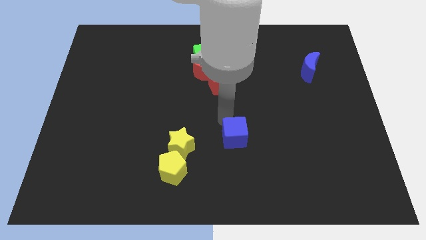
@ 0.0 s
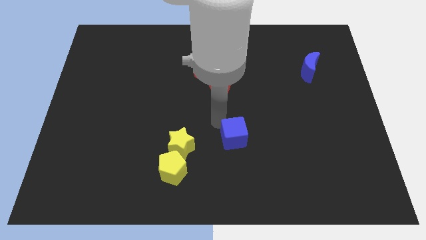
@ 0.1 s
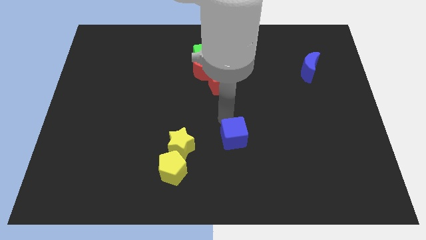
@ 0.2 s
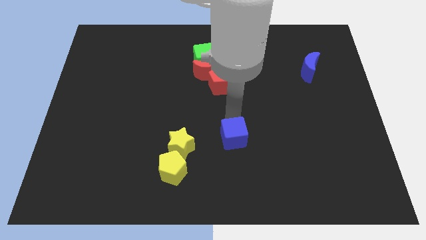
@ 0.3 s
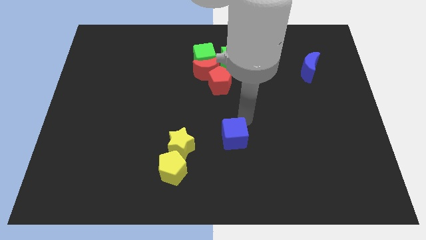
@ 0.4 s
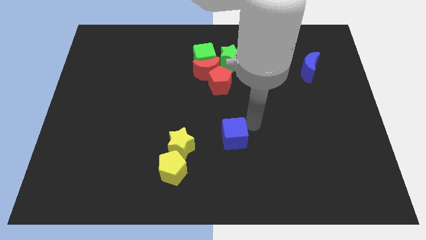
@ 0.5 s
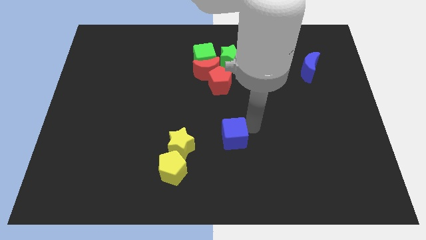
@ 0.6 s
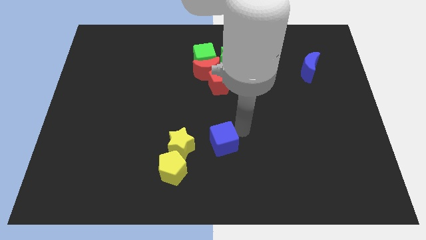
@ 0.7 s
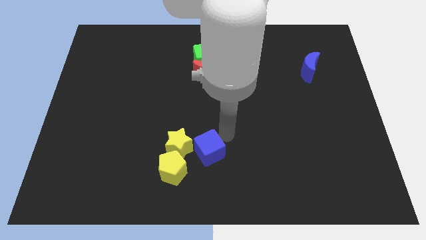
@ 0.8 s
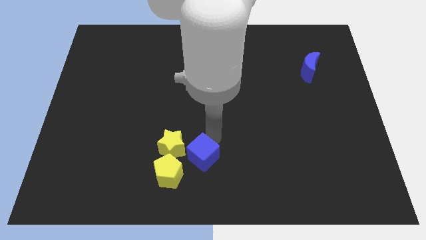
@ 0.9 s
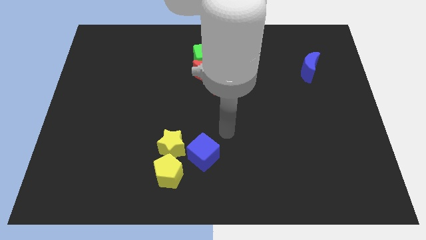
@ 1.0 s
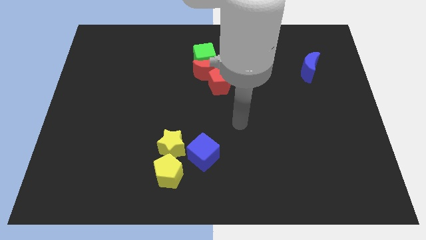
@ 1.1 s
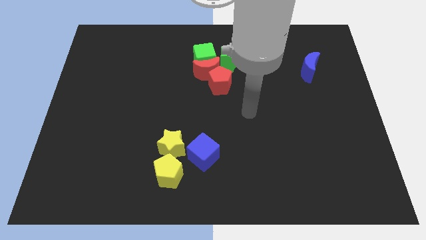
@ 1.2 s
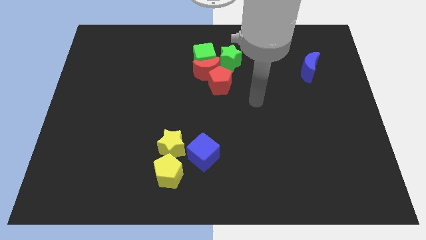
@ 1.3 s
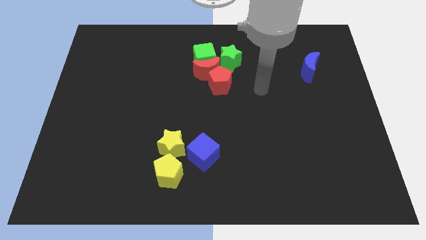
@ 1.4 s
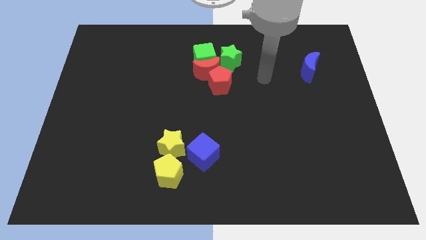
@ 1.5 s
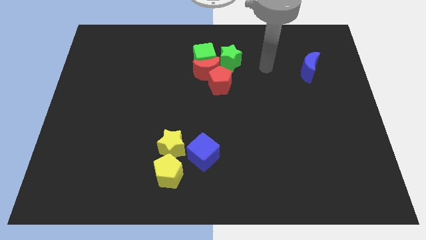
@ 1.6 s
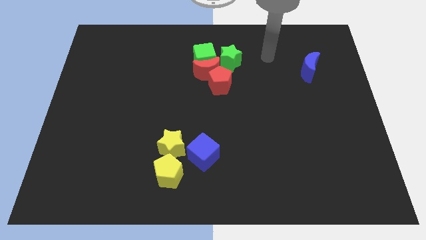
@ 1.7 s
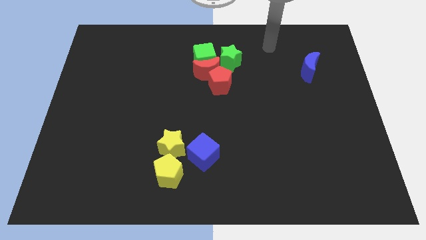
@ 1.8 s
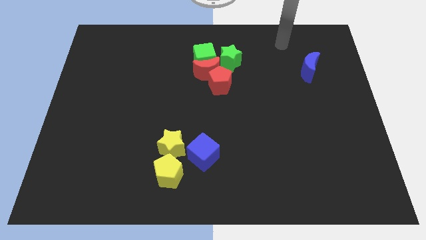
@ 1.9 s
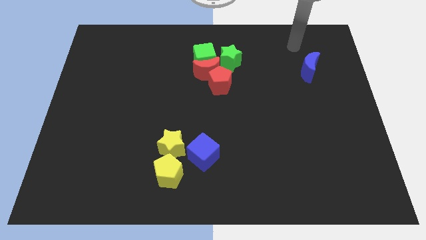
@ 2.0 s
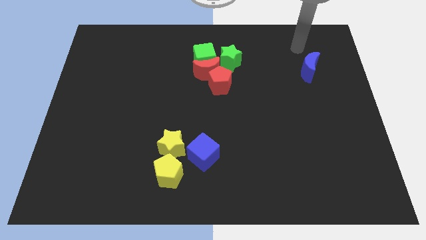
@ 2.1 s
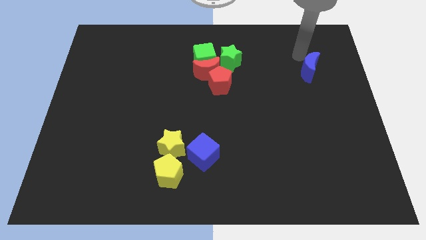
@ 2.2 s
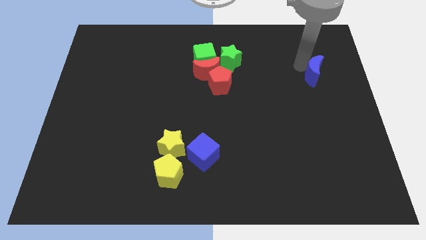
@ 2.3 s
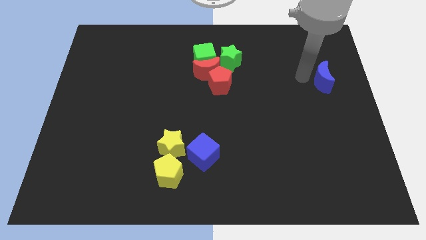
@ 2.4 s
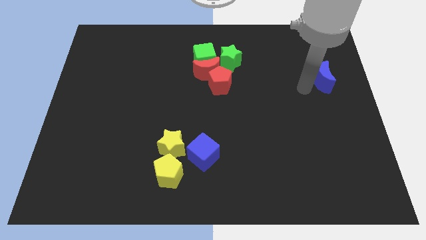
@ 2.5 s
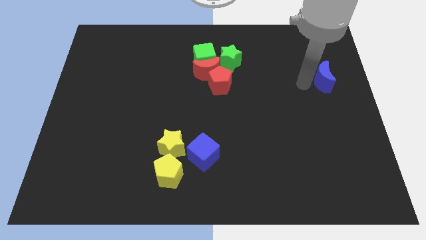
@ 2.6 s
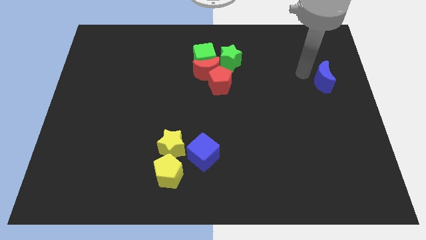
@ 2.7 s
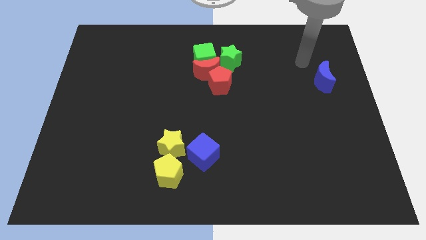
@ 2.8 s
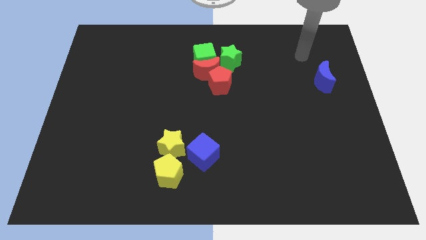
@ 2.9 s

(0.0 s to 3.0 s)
move the blue cube right to the yellow star

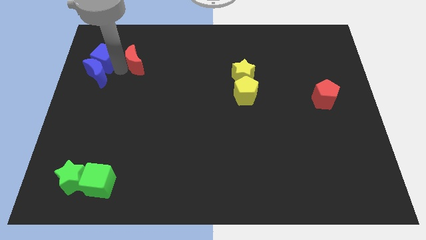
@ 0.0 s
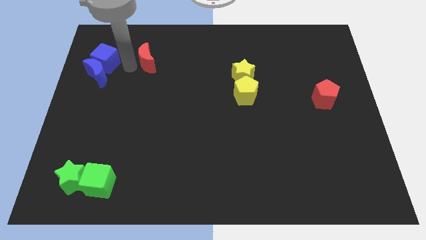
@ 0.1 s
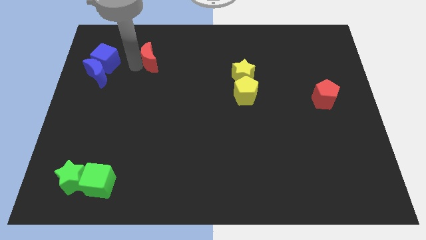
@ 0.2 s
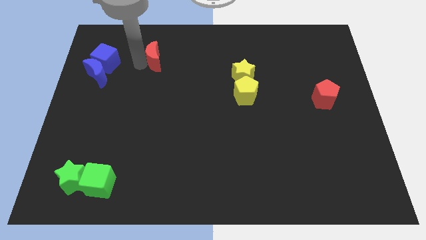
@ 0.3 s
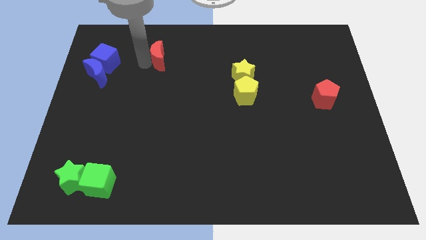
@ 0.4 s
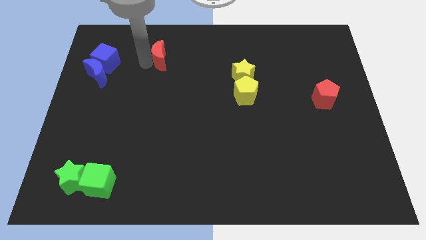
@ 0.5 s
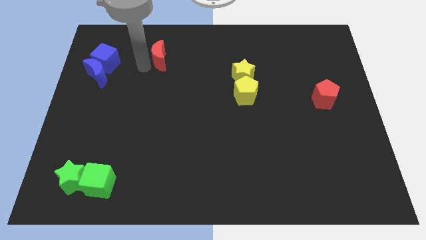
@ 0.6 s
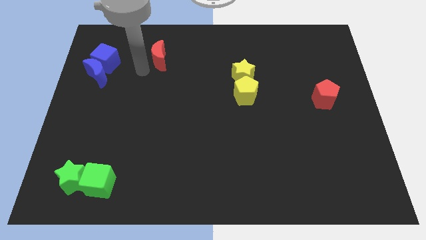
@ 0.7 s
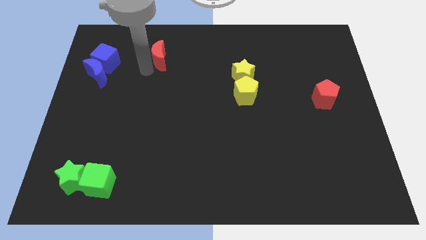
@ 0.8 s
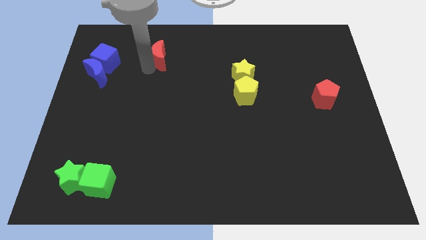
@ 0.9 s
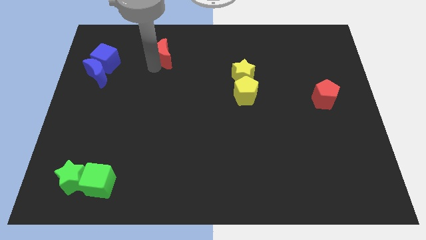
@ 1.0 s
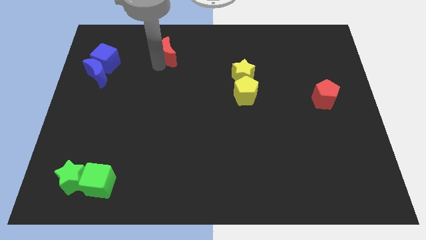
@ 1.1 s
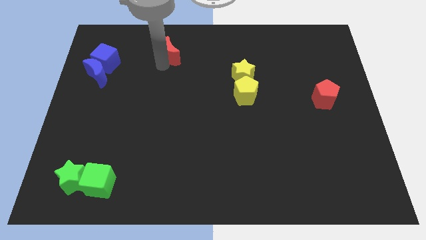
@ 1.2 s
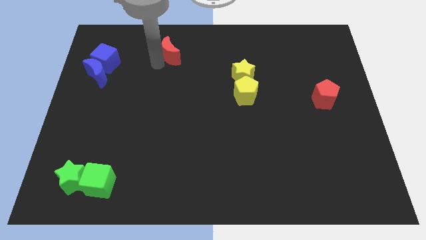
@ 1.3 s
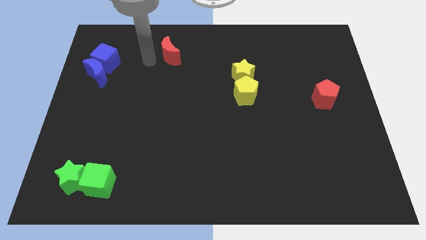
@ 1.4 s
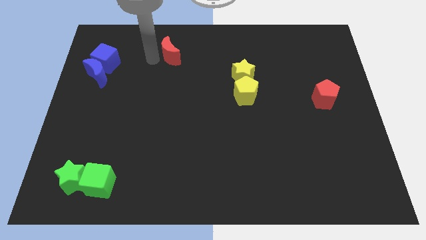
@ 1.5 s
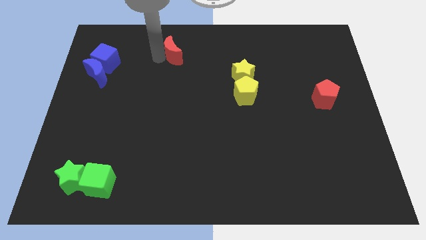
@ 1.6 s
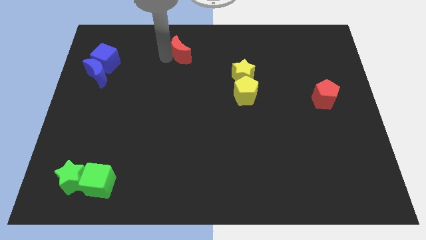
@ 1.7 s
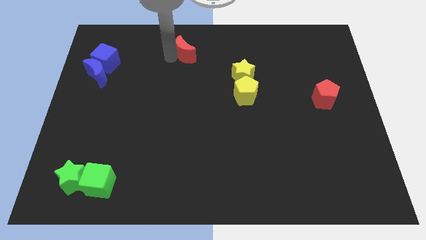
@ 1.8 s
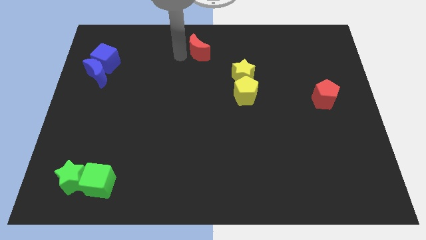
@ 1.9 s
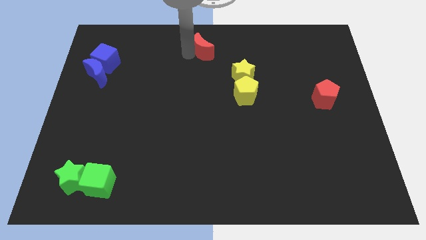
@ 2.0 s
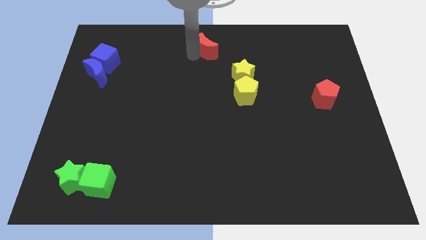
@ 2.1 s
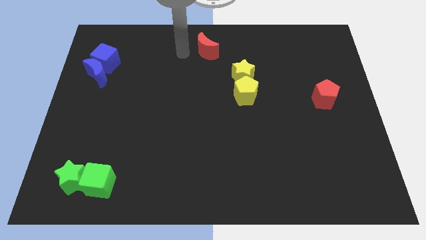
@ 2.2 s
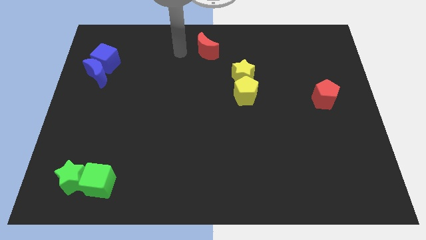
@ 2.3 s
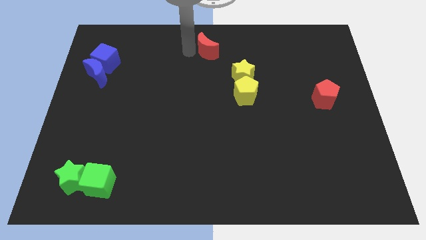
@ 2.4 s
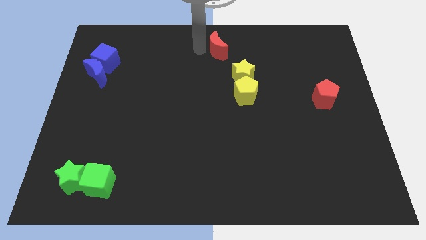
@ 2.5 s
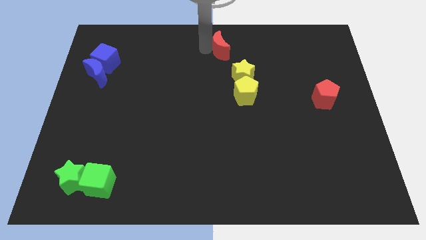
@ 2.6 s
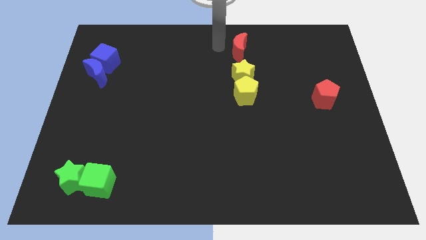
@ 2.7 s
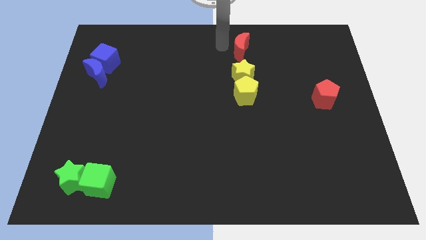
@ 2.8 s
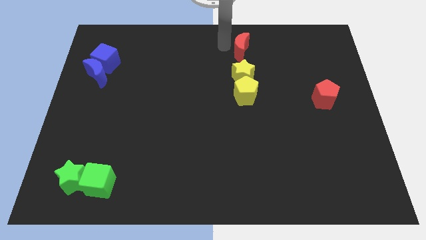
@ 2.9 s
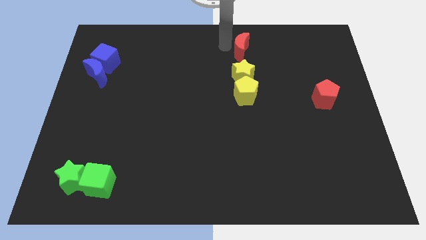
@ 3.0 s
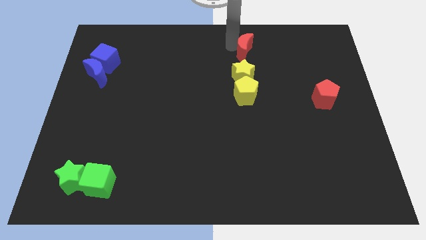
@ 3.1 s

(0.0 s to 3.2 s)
place the red moon above the yellow star

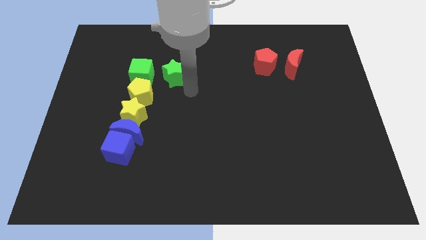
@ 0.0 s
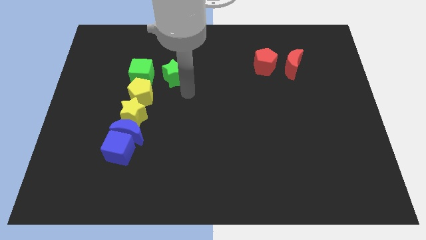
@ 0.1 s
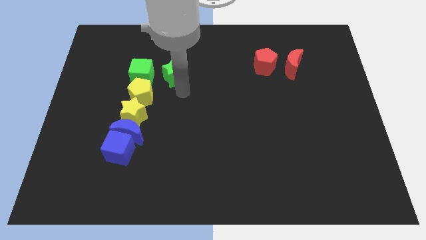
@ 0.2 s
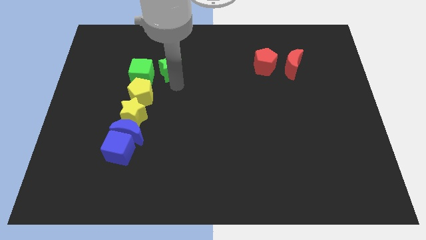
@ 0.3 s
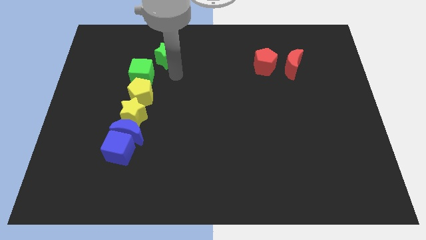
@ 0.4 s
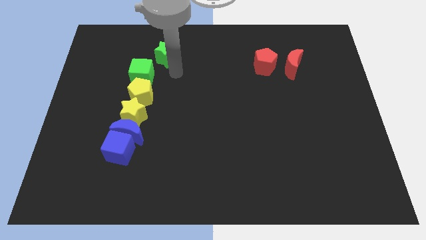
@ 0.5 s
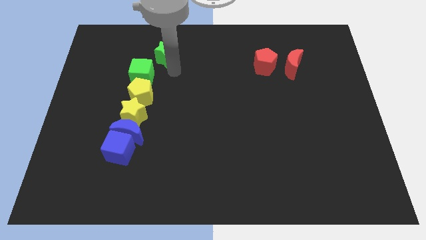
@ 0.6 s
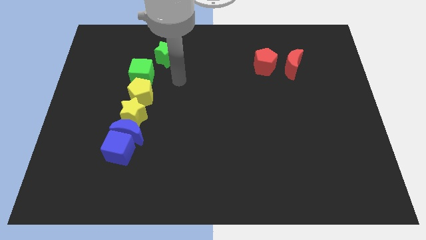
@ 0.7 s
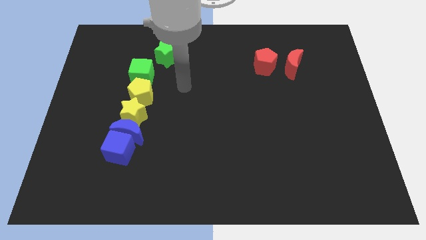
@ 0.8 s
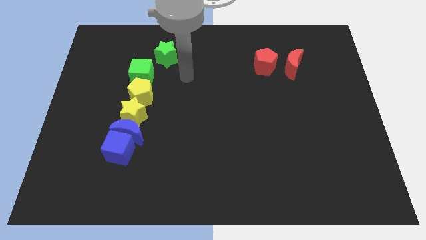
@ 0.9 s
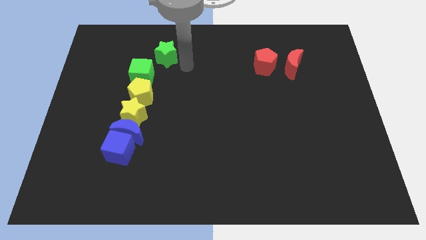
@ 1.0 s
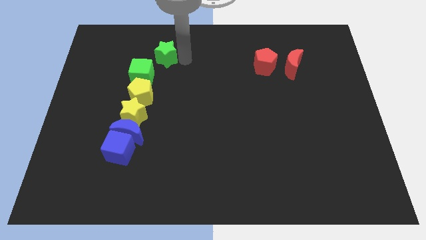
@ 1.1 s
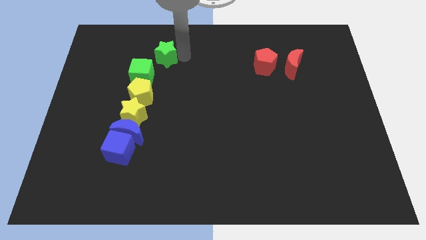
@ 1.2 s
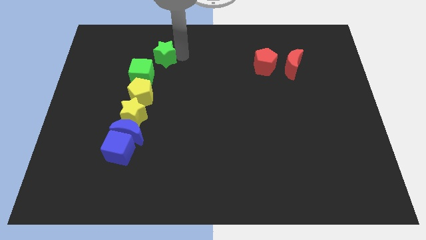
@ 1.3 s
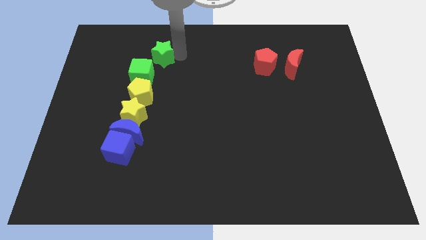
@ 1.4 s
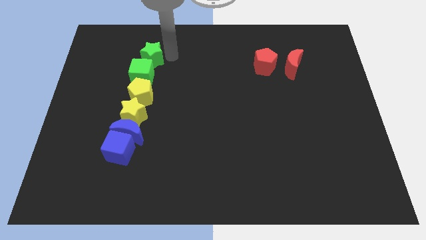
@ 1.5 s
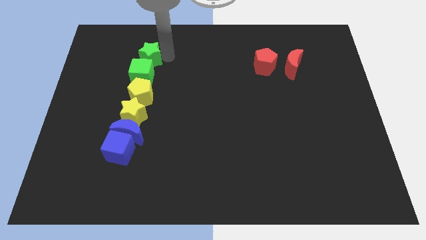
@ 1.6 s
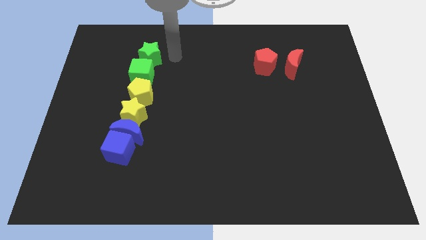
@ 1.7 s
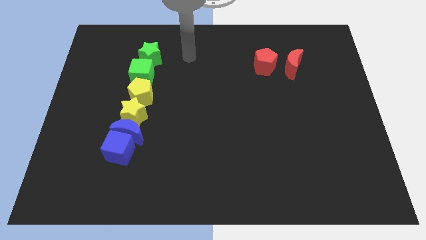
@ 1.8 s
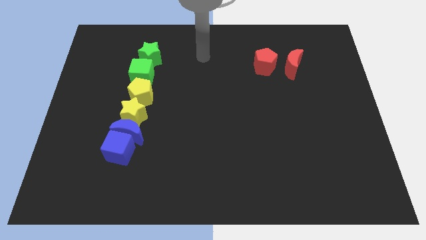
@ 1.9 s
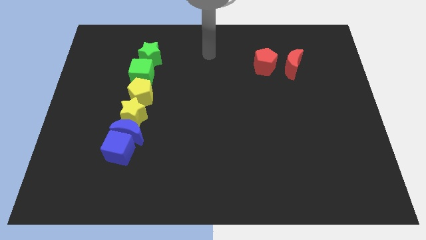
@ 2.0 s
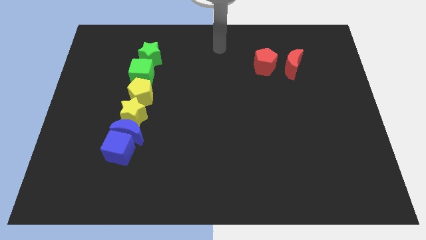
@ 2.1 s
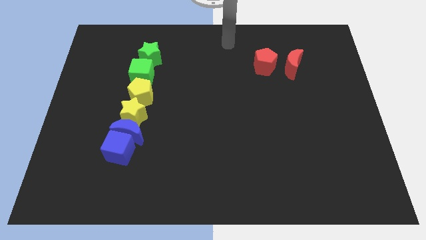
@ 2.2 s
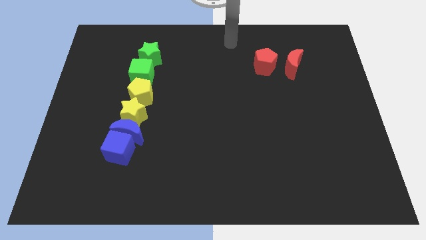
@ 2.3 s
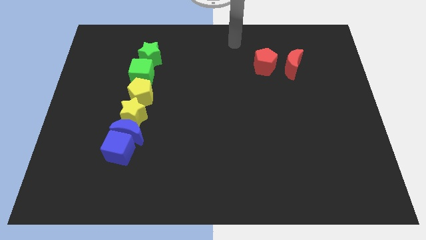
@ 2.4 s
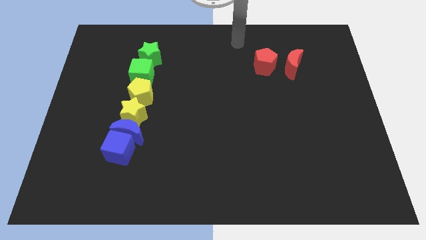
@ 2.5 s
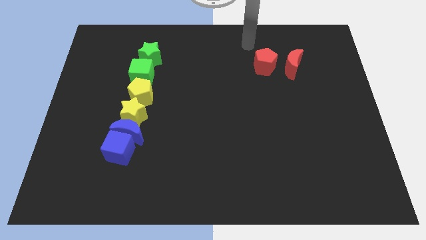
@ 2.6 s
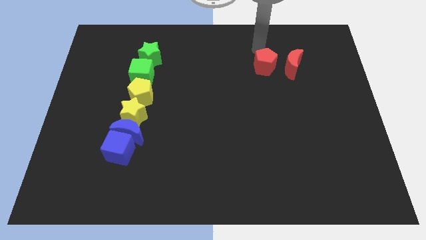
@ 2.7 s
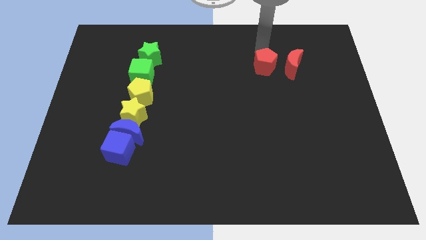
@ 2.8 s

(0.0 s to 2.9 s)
place the green star above the green cube
